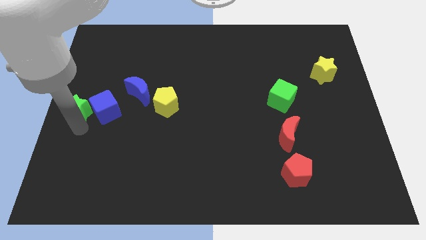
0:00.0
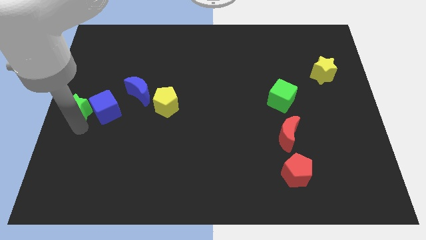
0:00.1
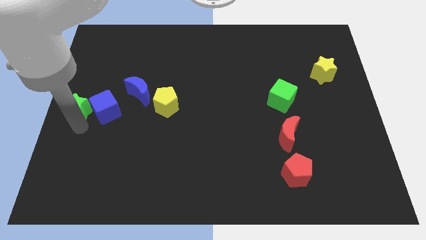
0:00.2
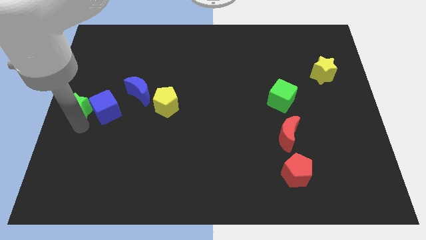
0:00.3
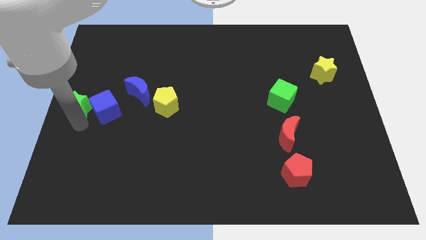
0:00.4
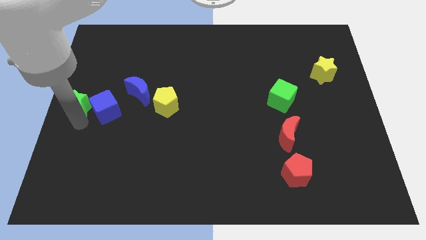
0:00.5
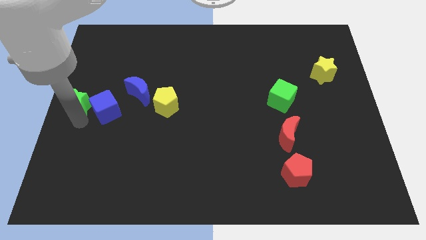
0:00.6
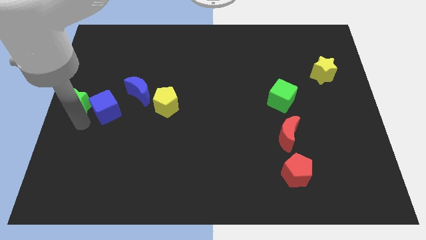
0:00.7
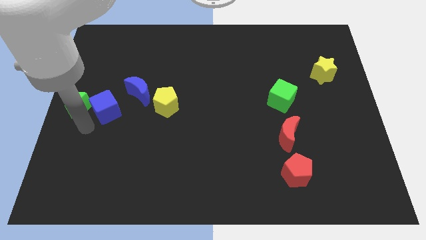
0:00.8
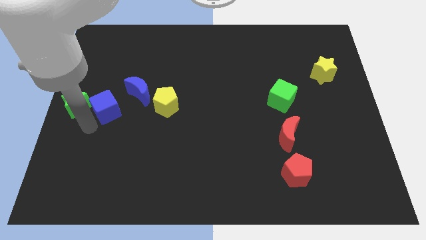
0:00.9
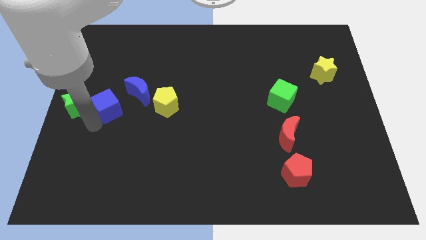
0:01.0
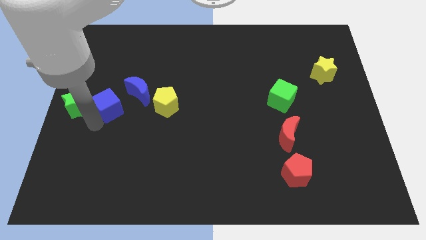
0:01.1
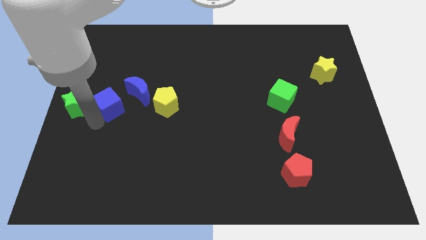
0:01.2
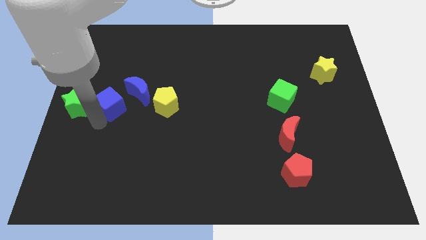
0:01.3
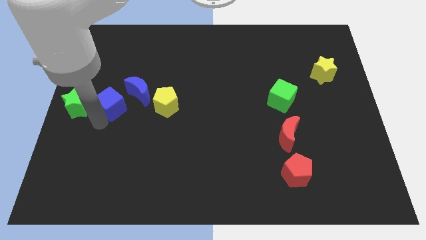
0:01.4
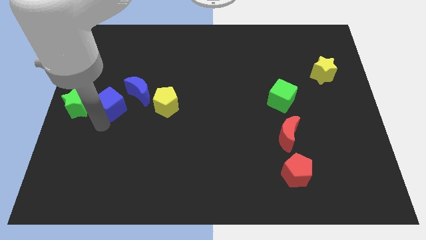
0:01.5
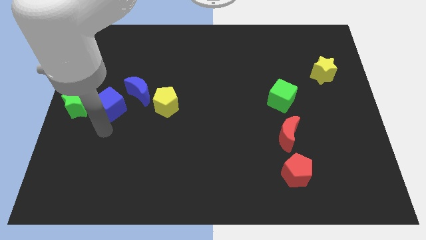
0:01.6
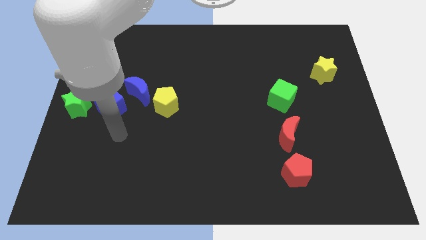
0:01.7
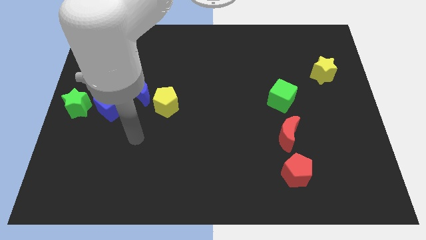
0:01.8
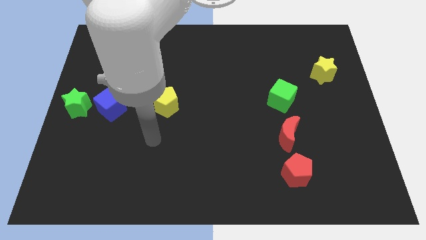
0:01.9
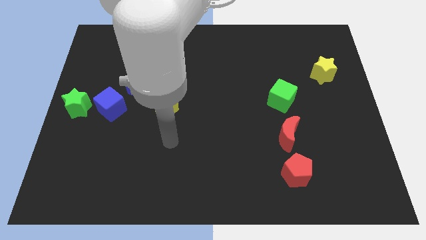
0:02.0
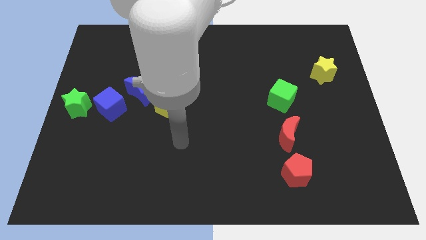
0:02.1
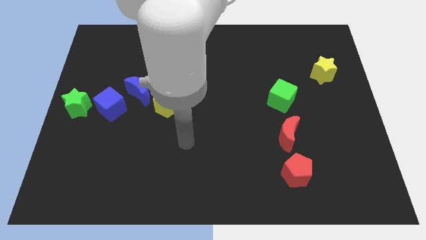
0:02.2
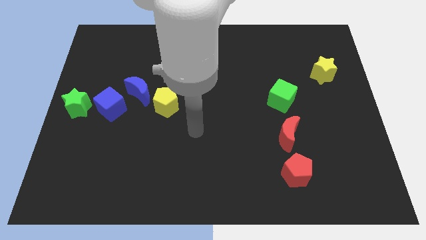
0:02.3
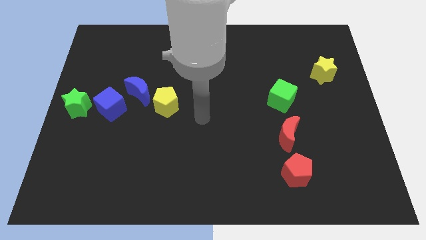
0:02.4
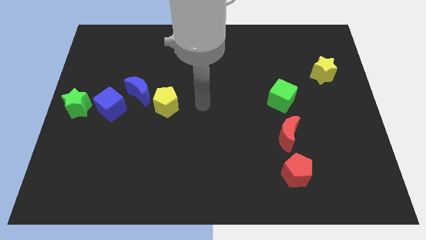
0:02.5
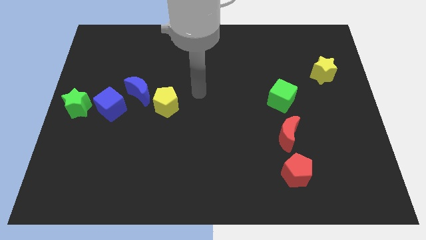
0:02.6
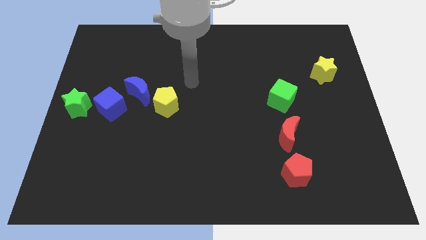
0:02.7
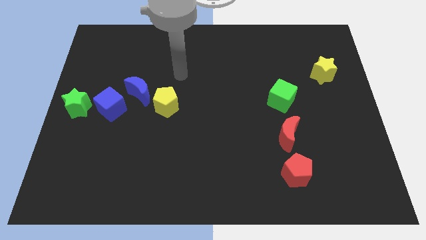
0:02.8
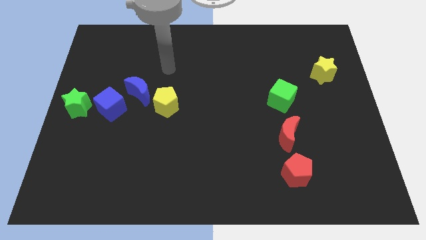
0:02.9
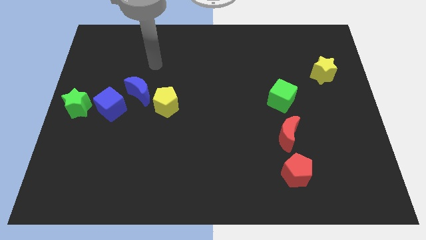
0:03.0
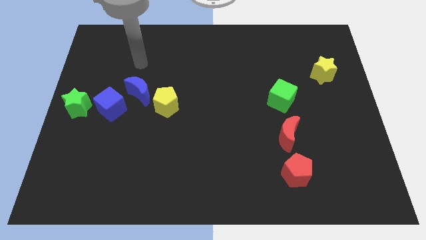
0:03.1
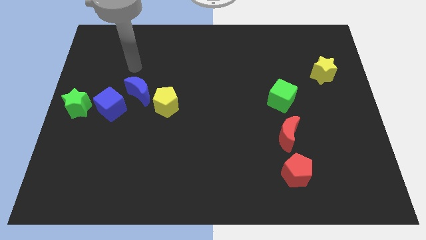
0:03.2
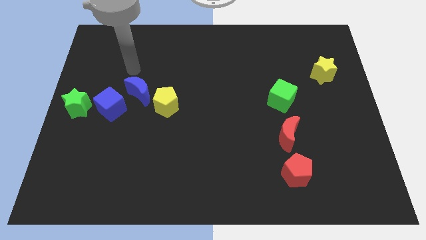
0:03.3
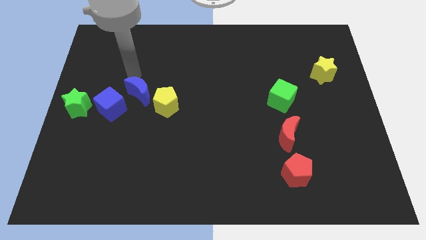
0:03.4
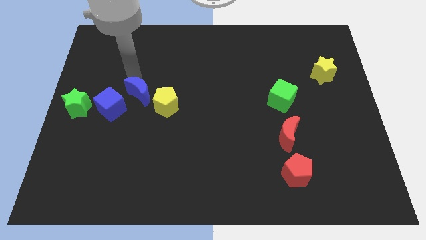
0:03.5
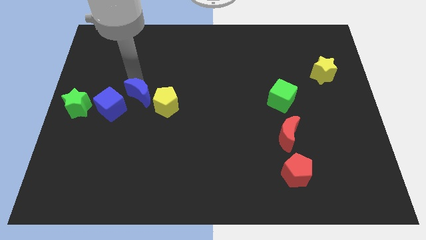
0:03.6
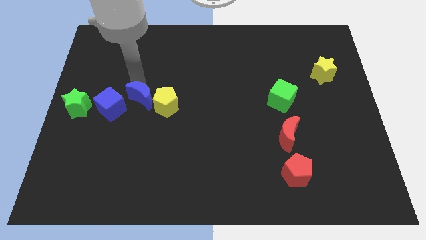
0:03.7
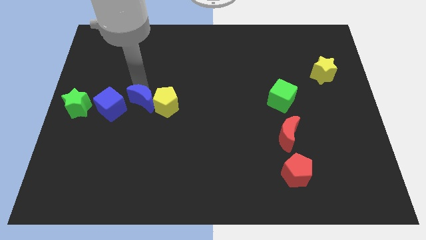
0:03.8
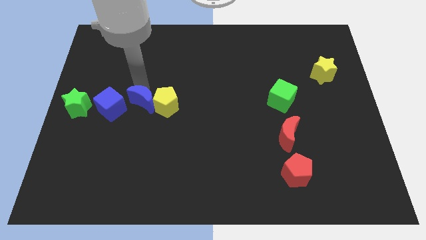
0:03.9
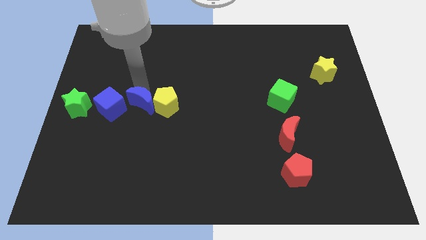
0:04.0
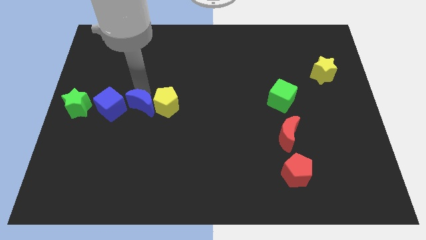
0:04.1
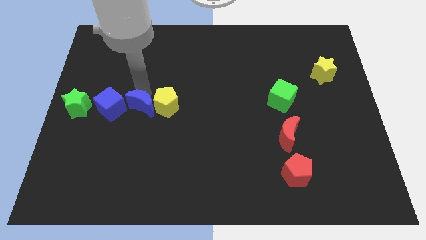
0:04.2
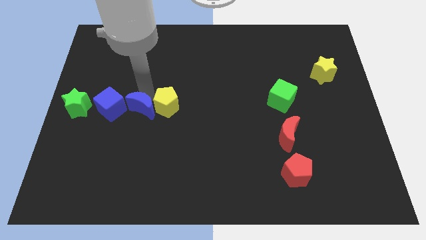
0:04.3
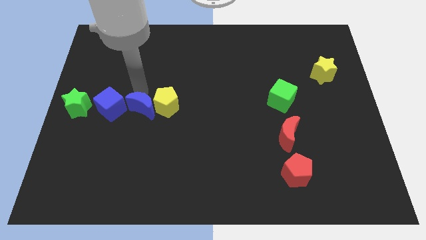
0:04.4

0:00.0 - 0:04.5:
arrange the group of blocks properly to form a line

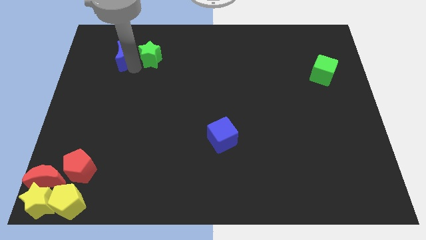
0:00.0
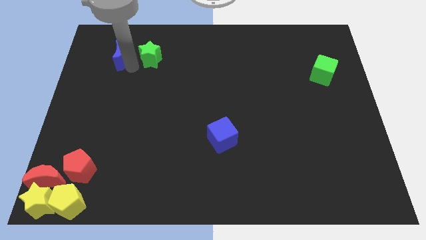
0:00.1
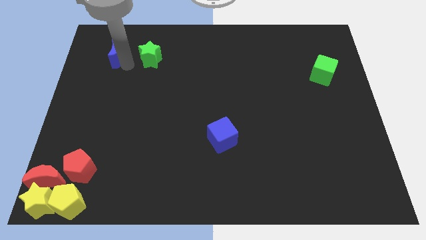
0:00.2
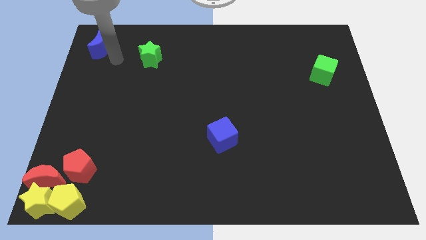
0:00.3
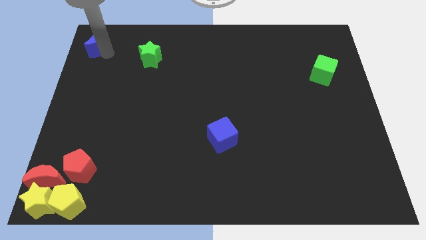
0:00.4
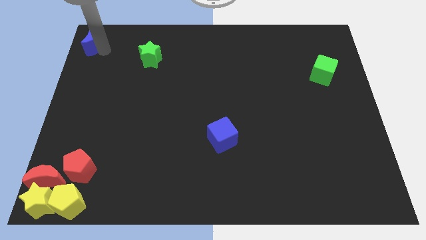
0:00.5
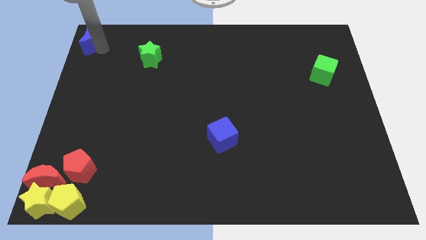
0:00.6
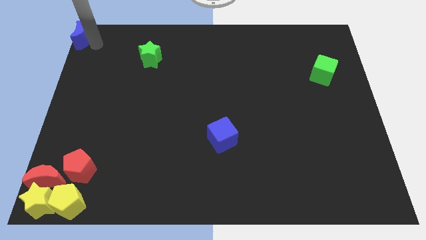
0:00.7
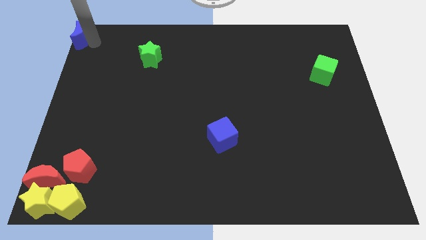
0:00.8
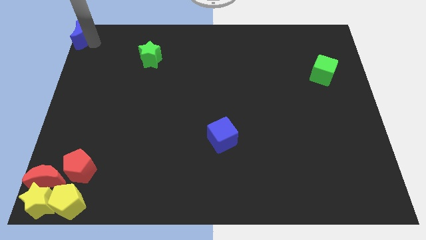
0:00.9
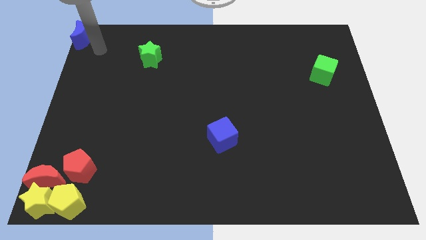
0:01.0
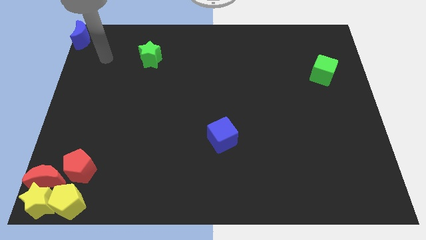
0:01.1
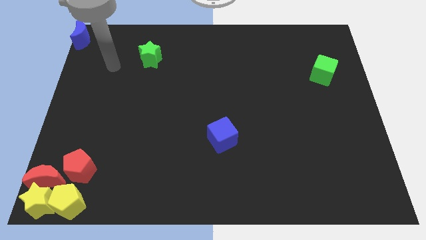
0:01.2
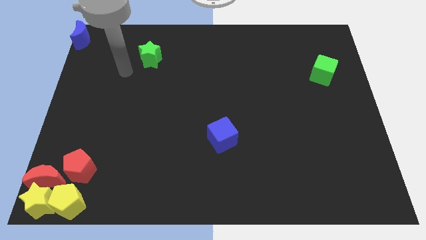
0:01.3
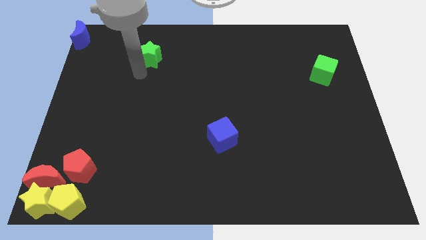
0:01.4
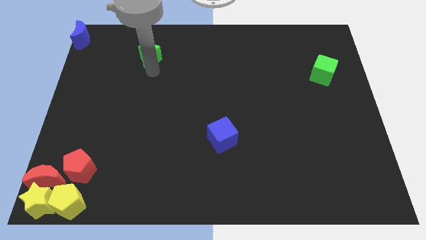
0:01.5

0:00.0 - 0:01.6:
move the blue crescent to the top left of the board

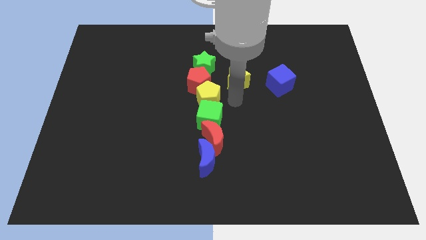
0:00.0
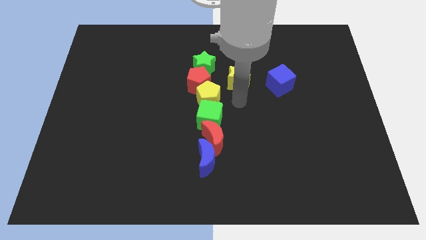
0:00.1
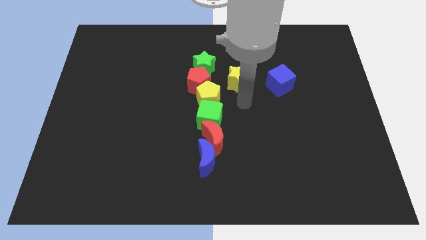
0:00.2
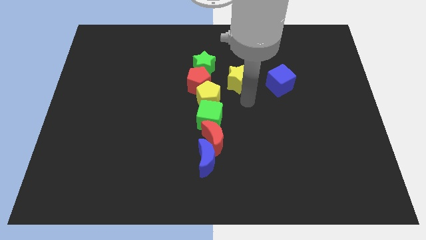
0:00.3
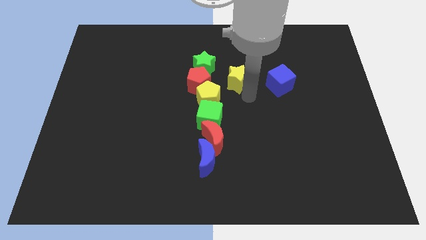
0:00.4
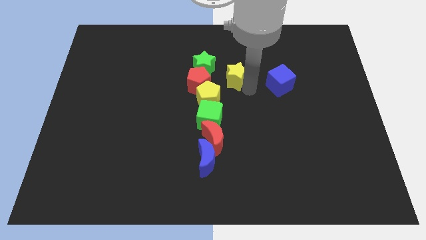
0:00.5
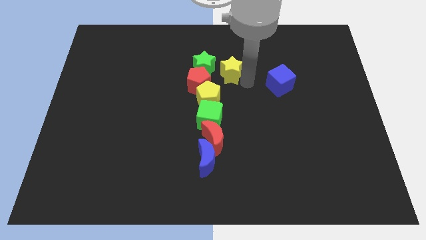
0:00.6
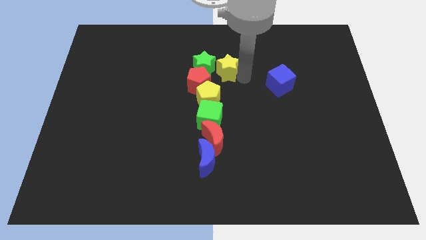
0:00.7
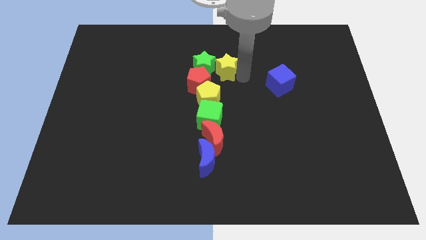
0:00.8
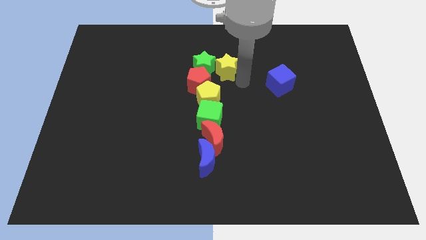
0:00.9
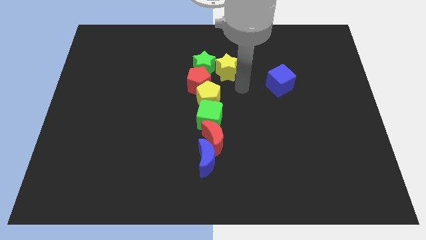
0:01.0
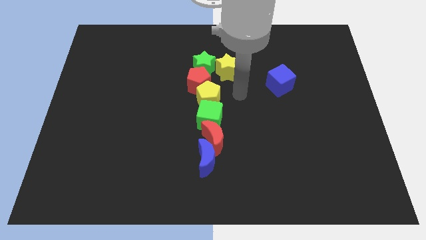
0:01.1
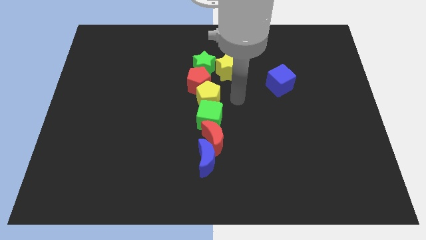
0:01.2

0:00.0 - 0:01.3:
place the yellow star to the right of the green star

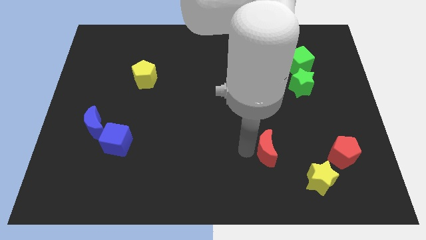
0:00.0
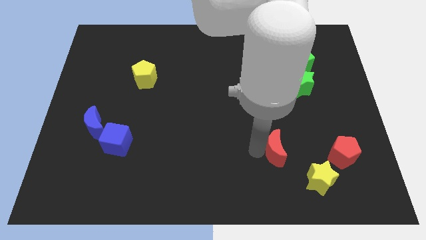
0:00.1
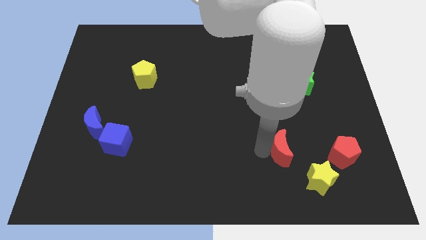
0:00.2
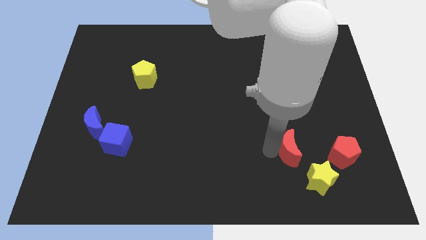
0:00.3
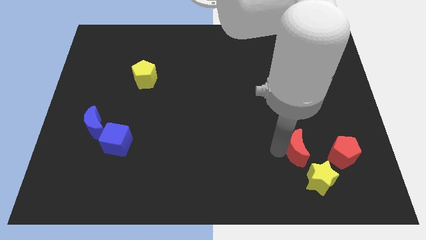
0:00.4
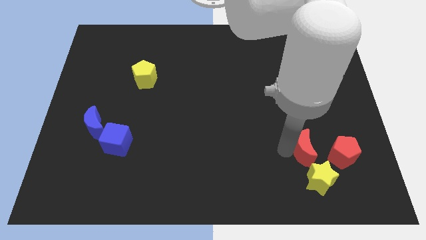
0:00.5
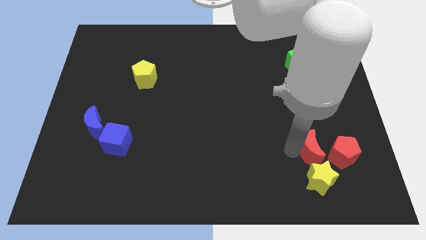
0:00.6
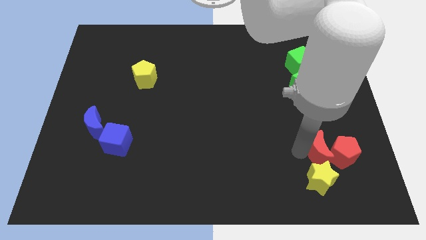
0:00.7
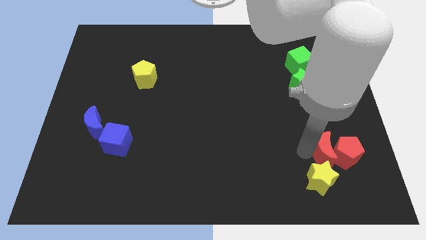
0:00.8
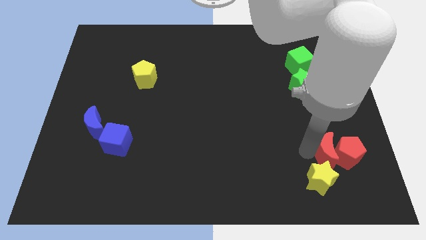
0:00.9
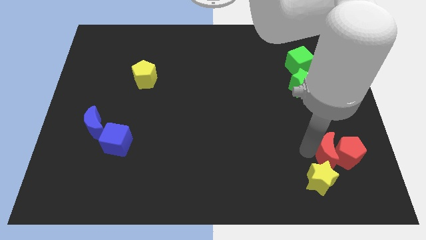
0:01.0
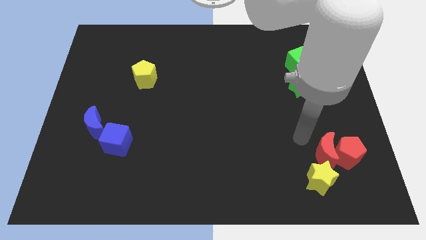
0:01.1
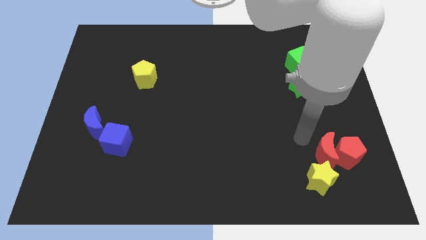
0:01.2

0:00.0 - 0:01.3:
move the red crescent into red pentagon

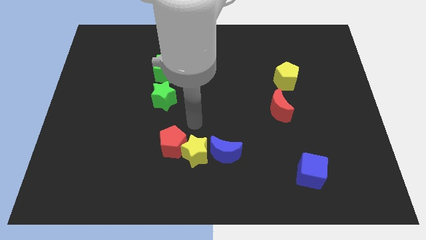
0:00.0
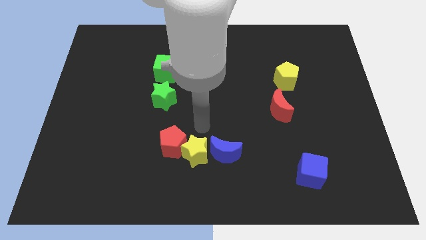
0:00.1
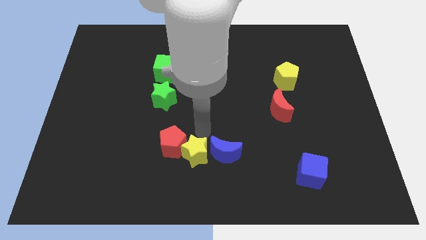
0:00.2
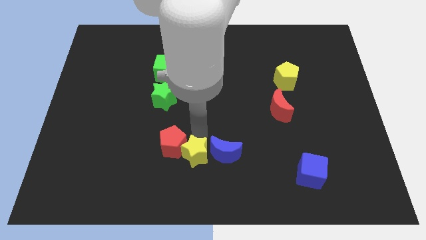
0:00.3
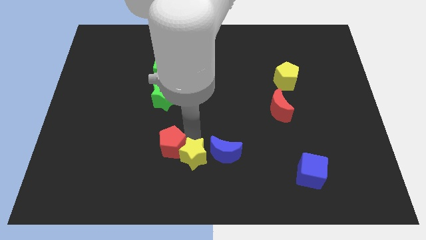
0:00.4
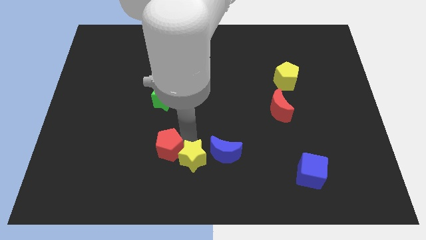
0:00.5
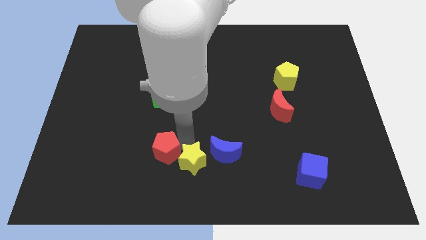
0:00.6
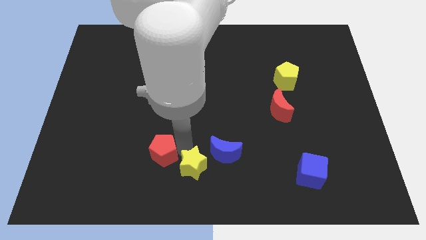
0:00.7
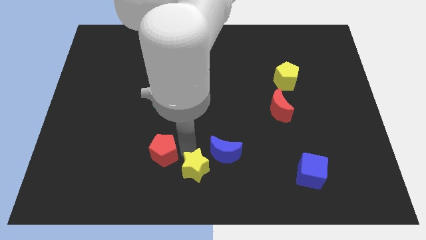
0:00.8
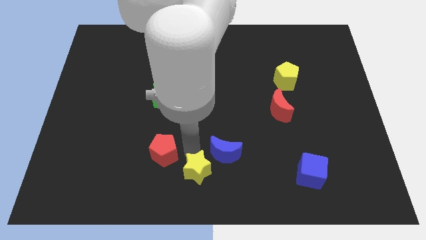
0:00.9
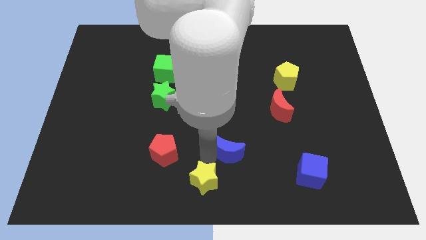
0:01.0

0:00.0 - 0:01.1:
separate the red pentagon and yellow star from each other
